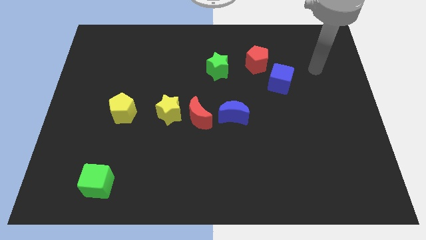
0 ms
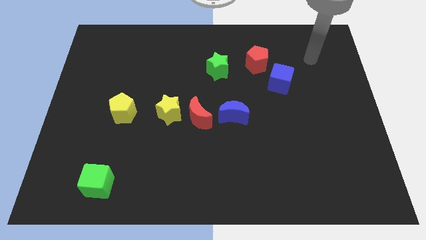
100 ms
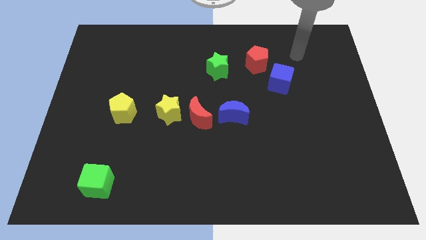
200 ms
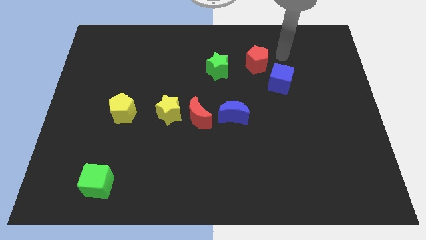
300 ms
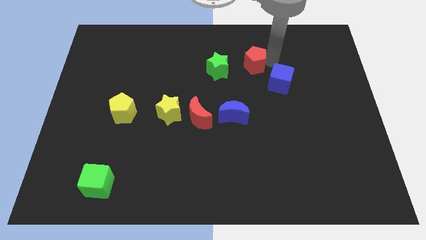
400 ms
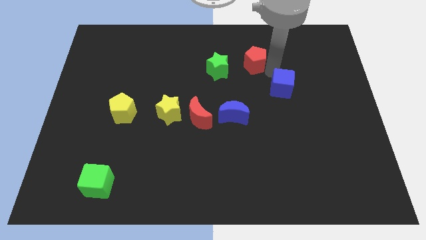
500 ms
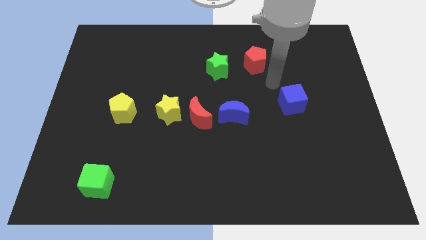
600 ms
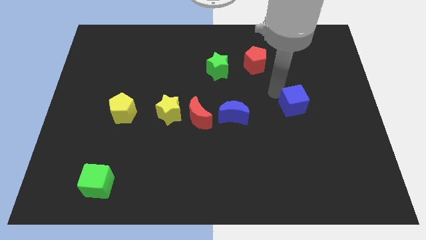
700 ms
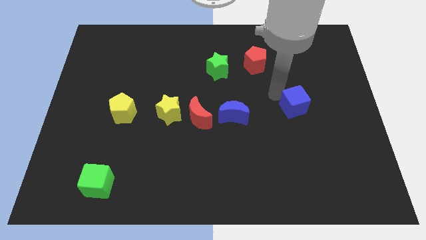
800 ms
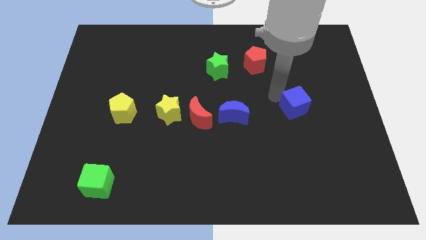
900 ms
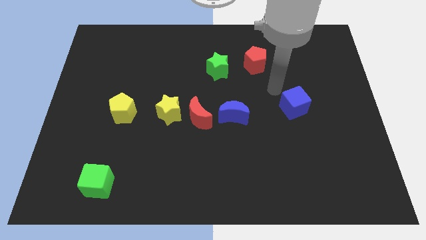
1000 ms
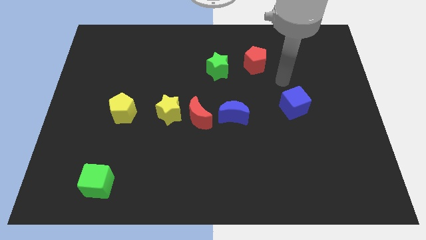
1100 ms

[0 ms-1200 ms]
separate blue cube from red pentagon

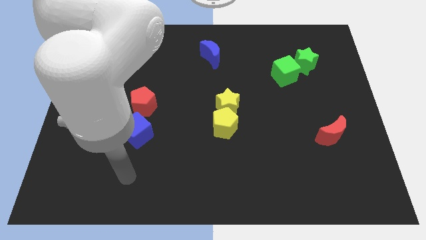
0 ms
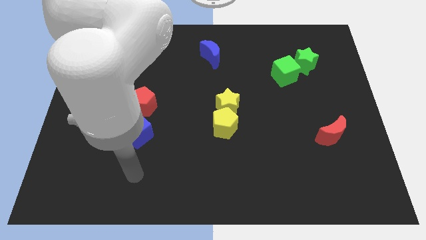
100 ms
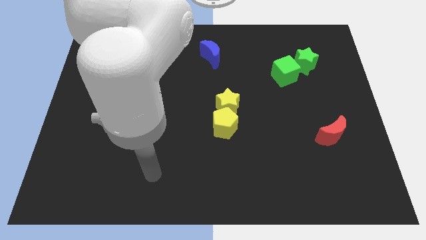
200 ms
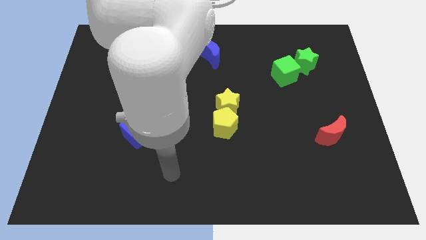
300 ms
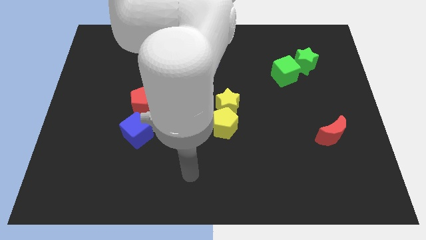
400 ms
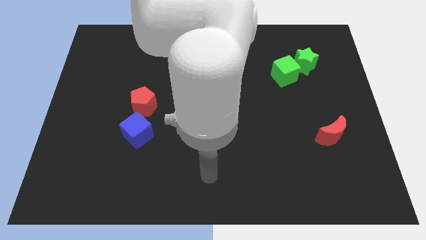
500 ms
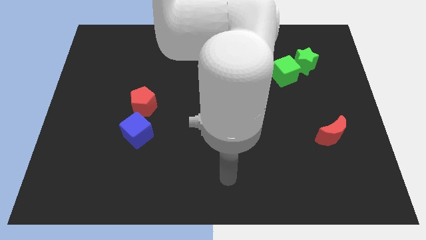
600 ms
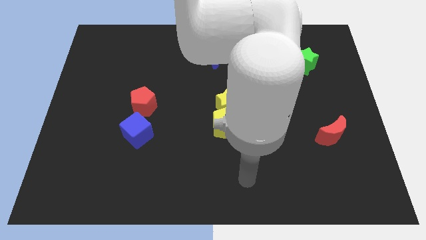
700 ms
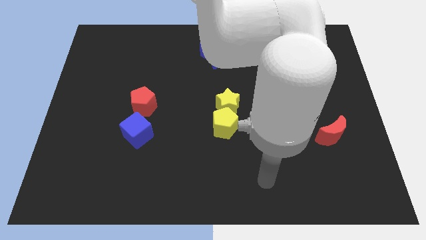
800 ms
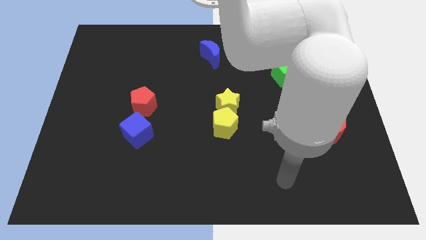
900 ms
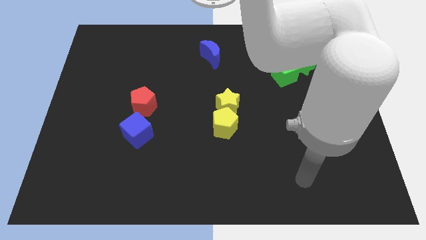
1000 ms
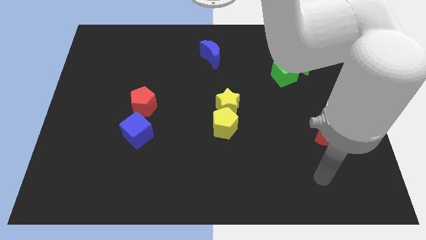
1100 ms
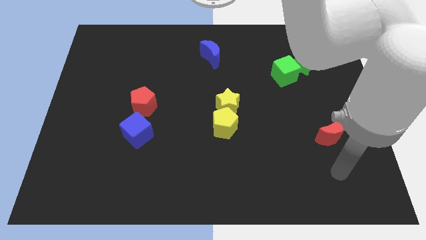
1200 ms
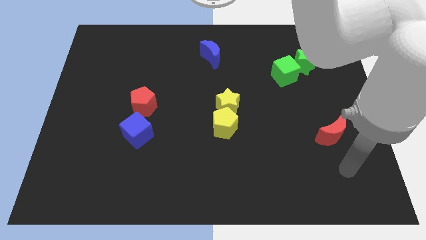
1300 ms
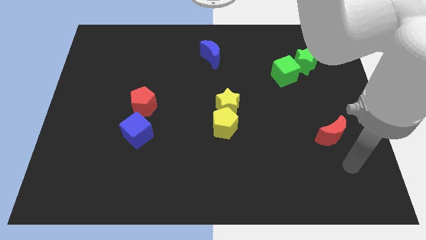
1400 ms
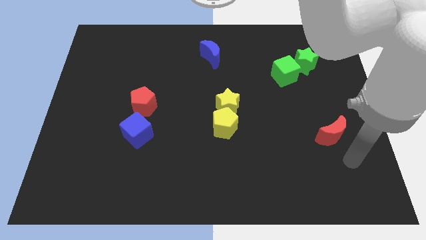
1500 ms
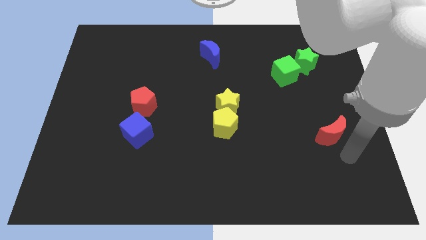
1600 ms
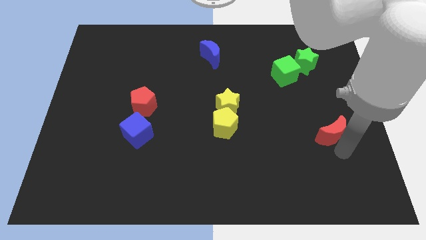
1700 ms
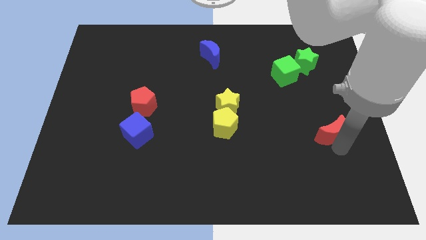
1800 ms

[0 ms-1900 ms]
move your arm to the bottom side of the red moon

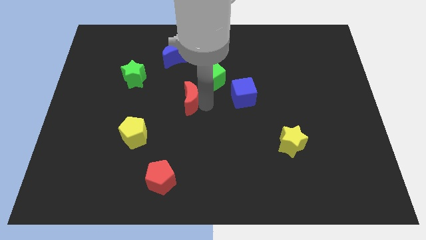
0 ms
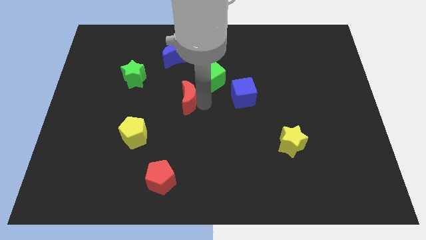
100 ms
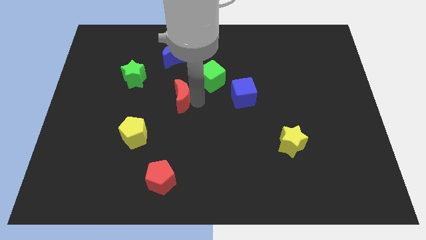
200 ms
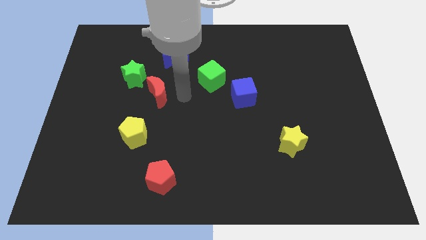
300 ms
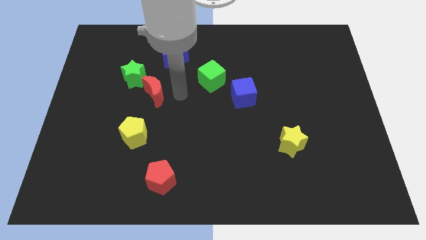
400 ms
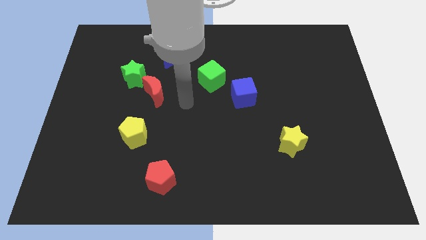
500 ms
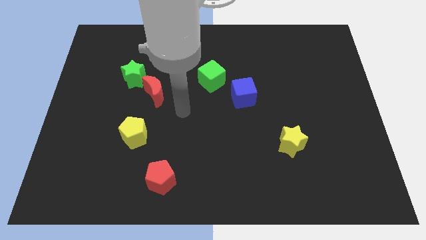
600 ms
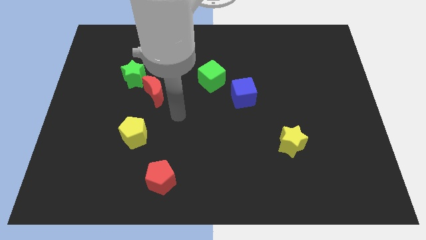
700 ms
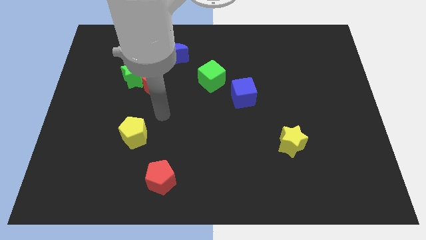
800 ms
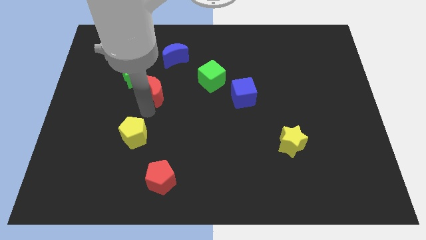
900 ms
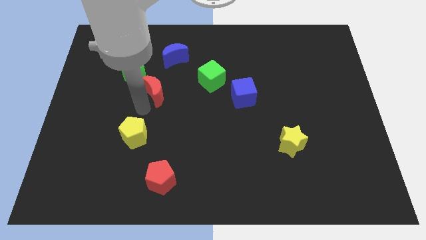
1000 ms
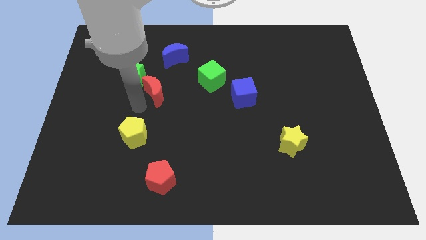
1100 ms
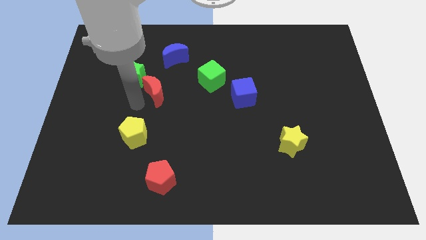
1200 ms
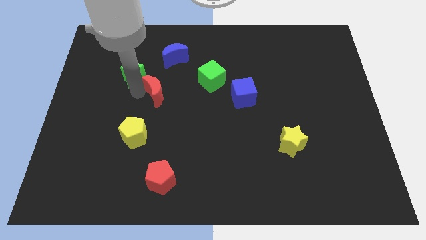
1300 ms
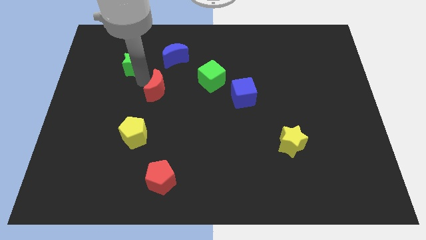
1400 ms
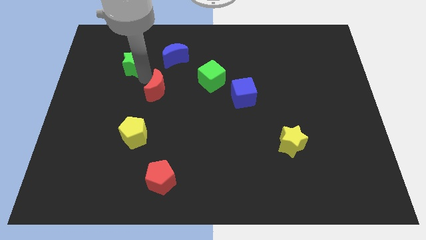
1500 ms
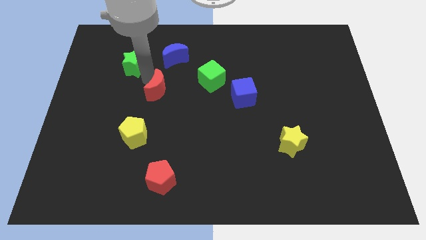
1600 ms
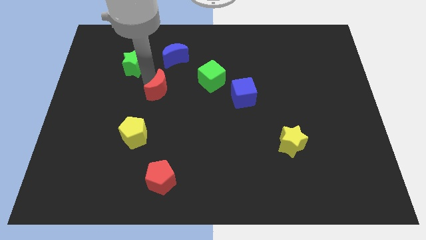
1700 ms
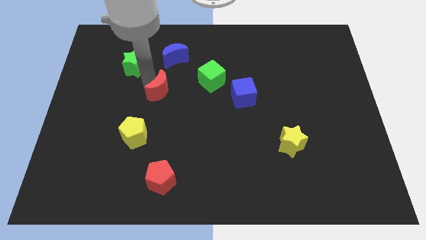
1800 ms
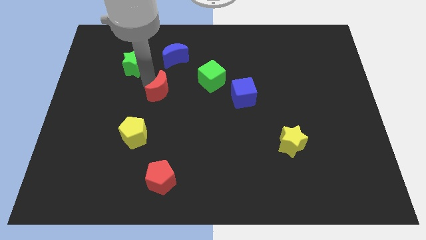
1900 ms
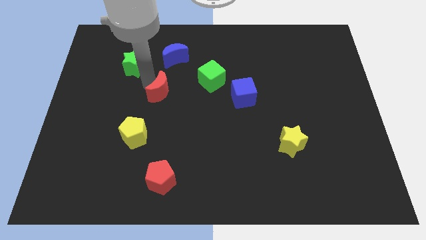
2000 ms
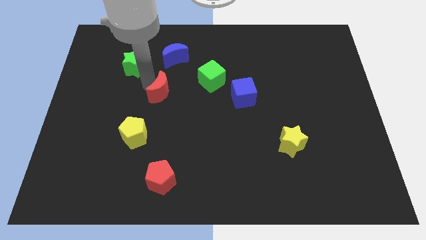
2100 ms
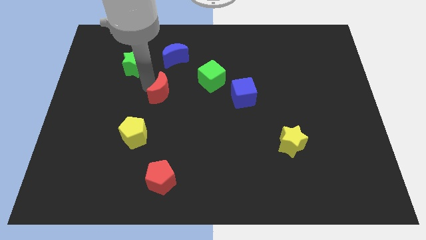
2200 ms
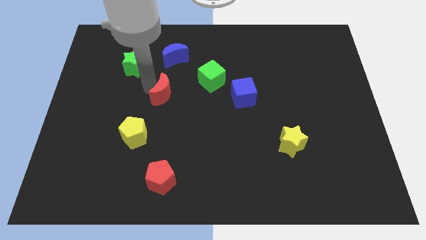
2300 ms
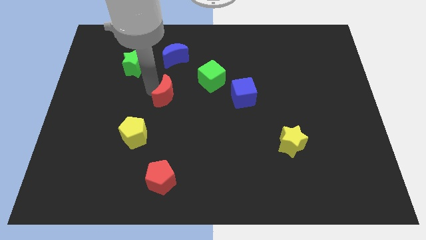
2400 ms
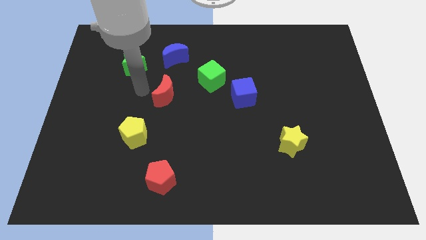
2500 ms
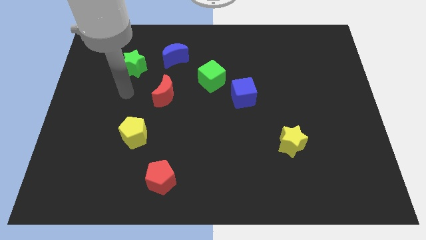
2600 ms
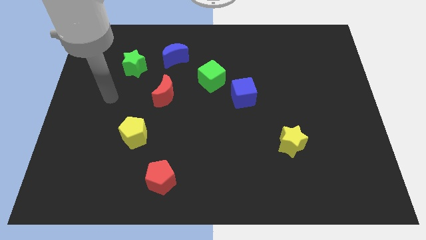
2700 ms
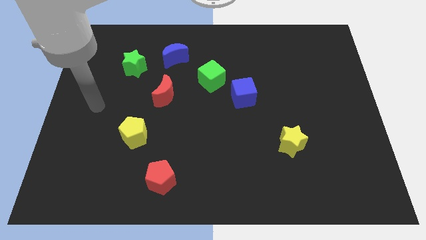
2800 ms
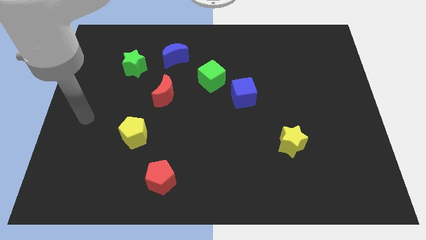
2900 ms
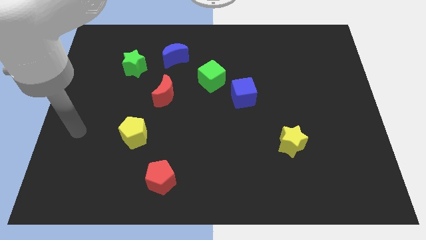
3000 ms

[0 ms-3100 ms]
push the red crescent diagonal to the green star at the bottom right side

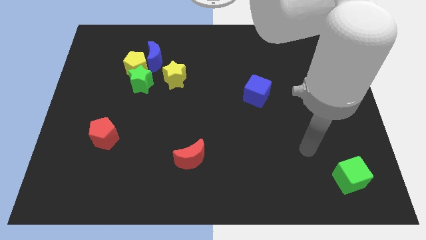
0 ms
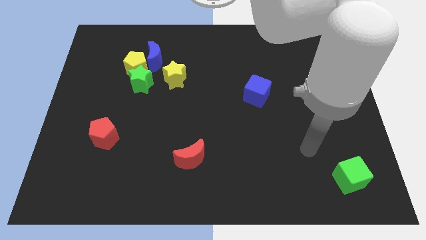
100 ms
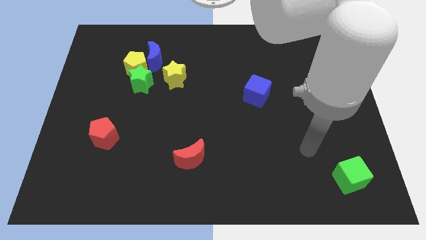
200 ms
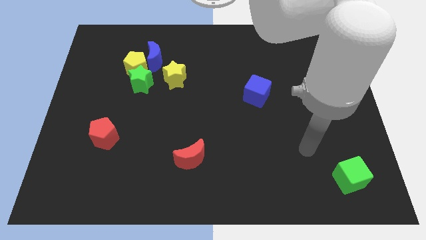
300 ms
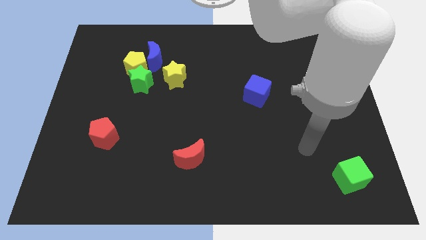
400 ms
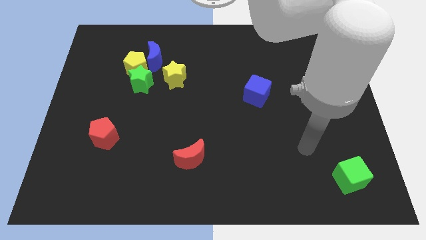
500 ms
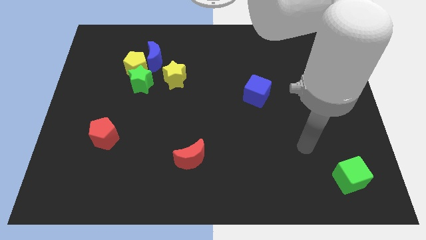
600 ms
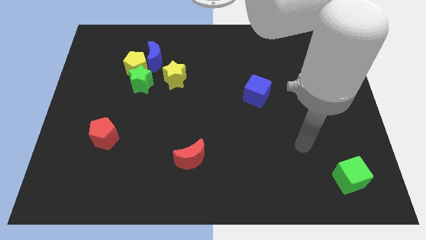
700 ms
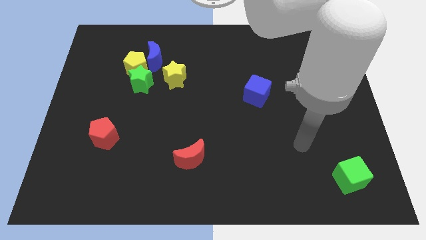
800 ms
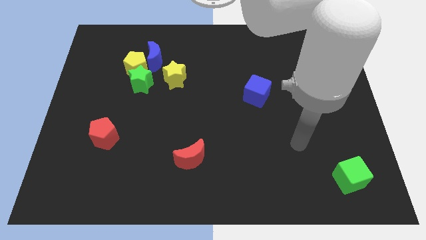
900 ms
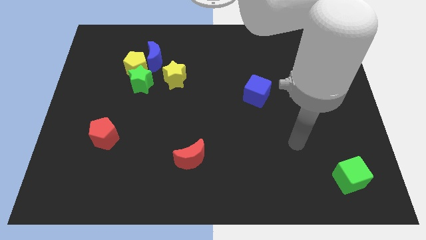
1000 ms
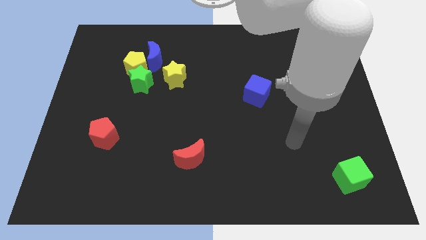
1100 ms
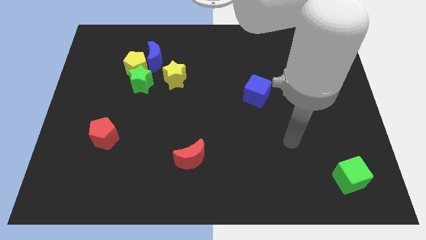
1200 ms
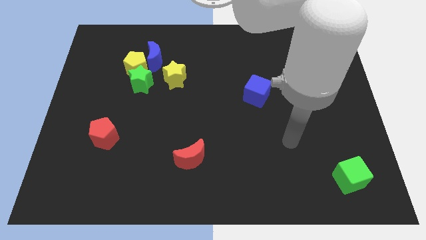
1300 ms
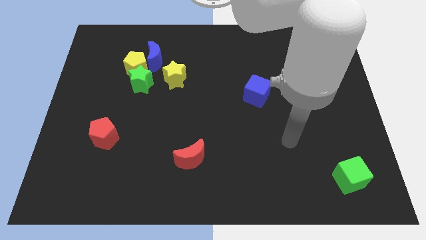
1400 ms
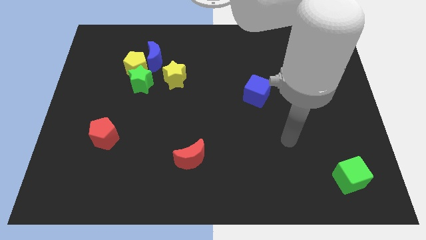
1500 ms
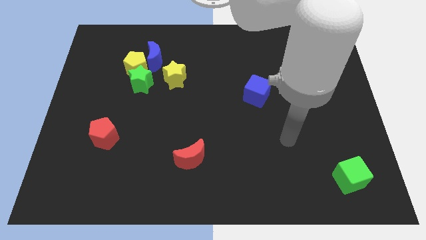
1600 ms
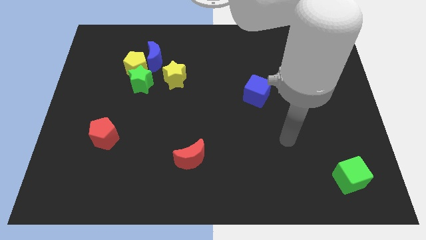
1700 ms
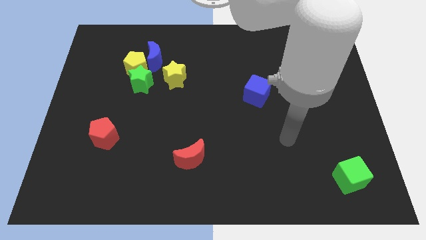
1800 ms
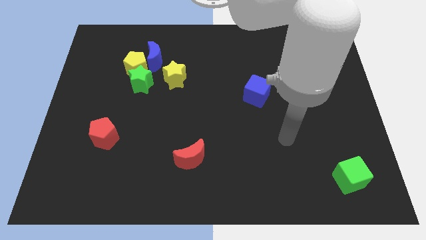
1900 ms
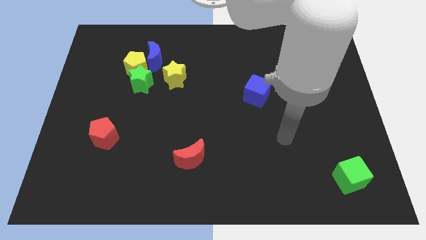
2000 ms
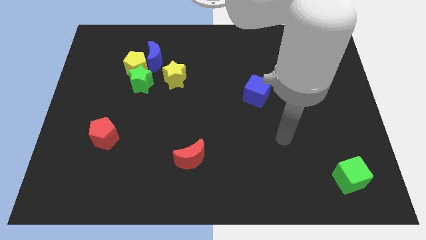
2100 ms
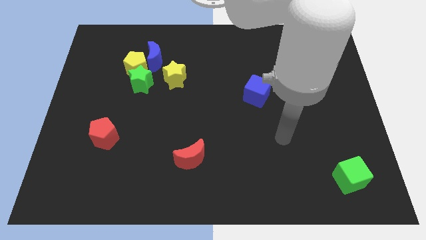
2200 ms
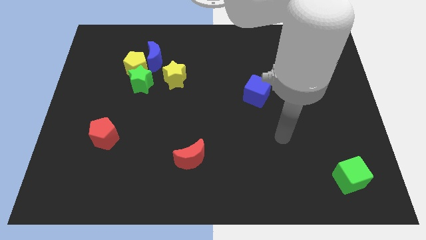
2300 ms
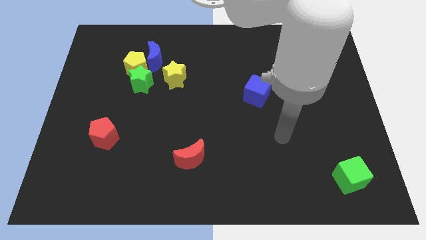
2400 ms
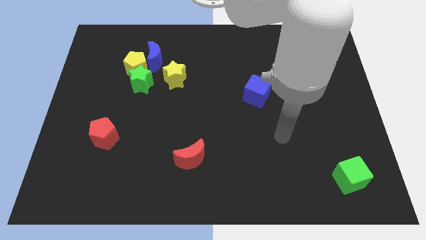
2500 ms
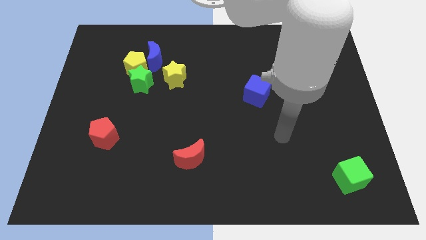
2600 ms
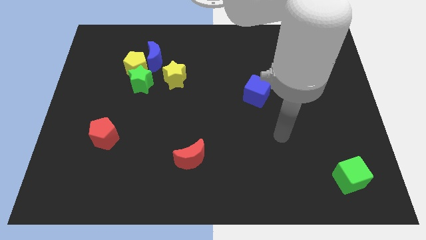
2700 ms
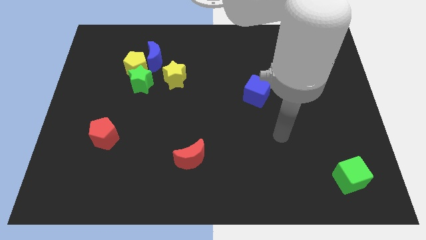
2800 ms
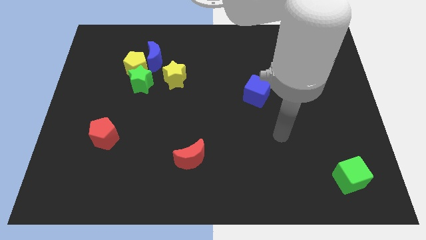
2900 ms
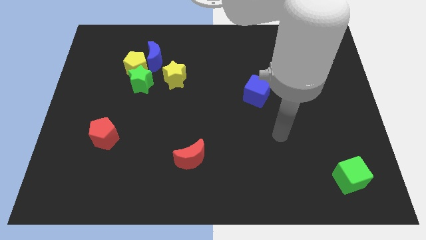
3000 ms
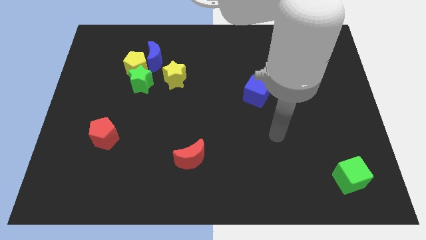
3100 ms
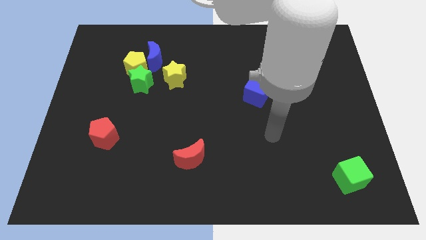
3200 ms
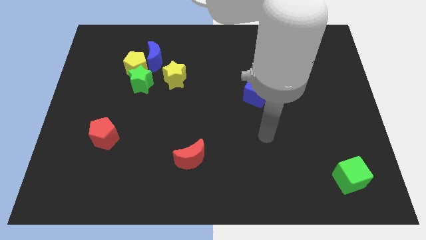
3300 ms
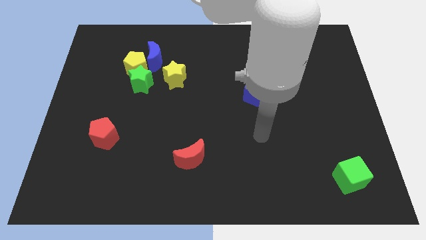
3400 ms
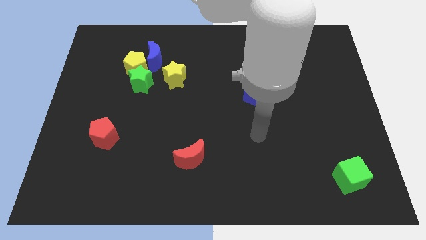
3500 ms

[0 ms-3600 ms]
move the arm to the vertical bottom side of the blue cube
